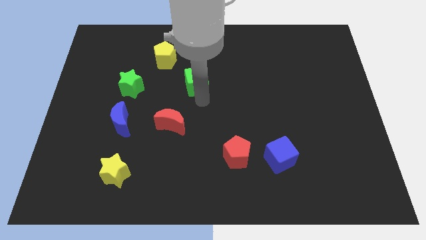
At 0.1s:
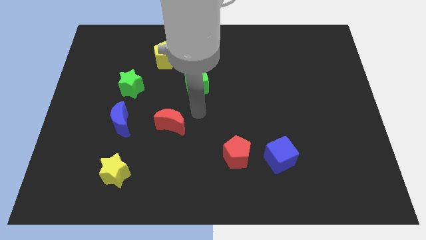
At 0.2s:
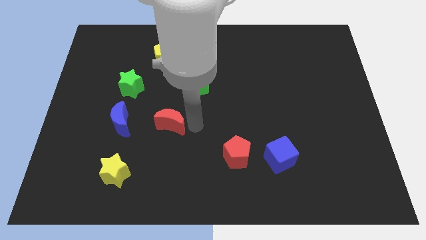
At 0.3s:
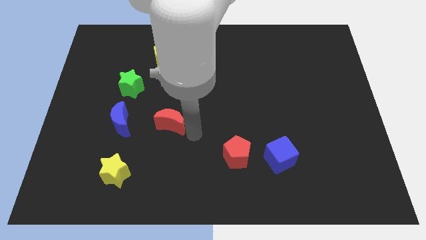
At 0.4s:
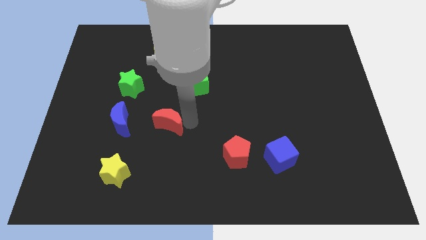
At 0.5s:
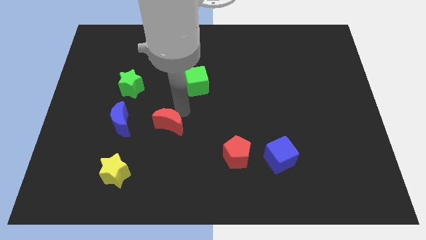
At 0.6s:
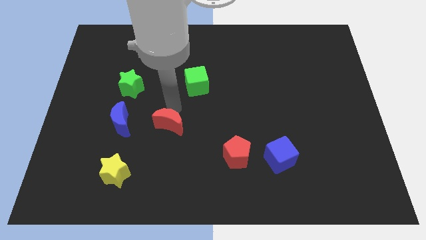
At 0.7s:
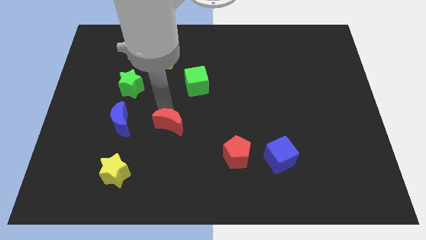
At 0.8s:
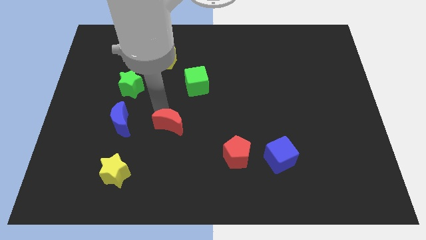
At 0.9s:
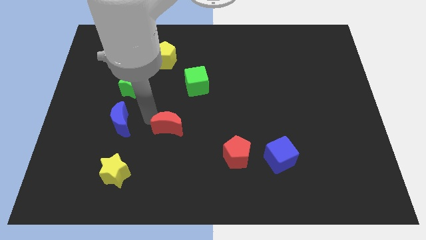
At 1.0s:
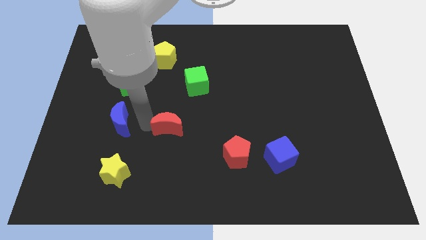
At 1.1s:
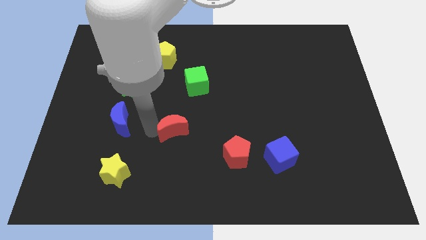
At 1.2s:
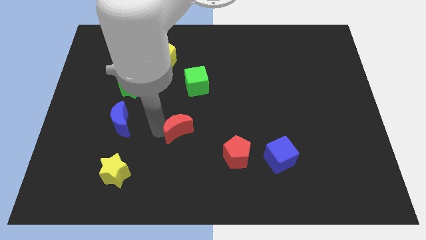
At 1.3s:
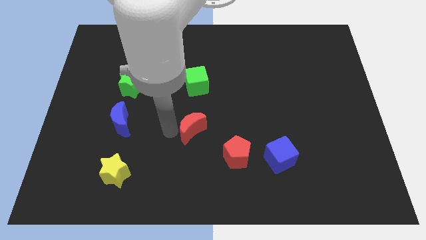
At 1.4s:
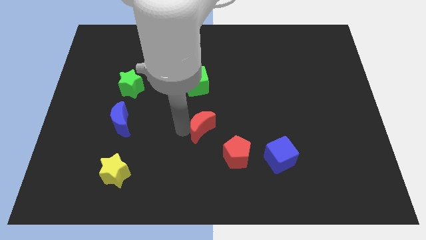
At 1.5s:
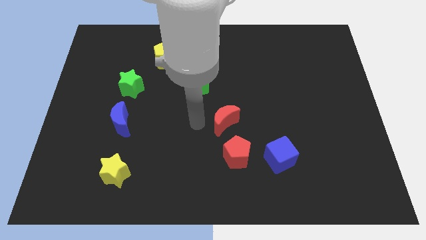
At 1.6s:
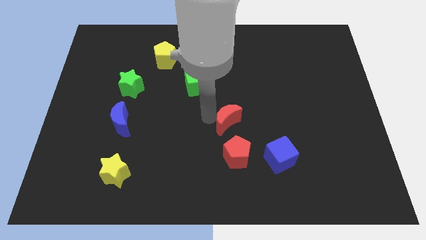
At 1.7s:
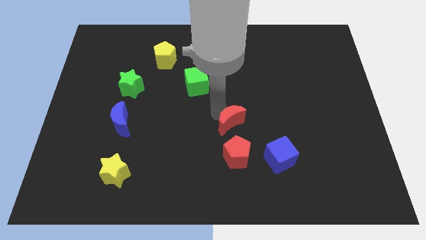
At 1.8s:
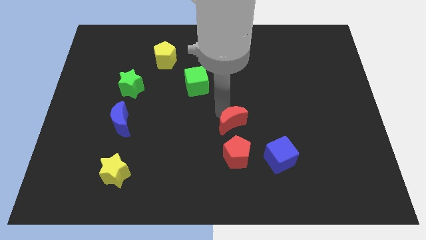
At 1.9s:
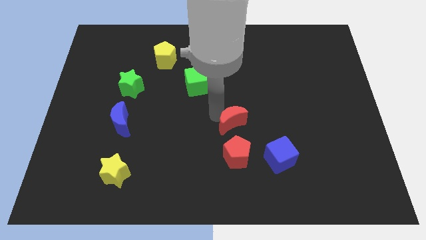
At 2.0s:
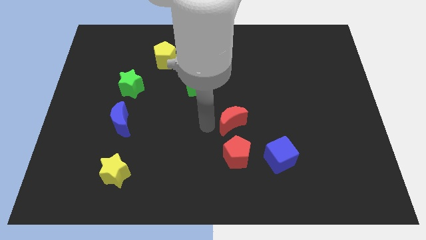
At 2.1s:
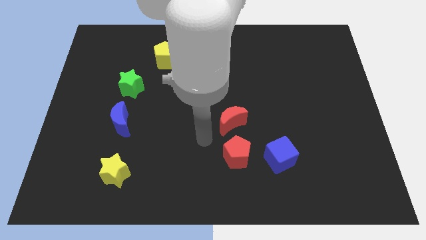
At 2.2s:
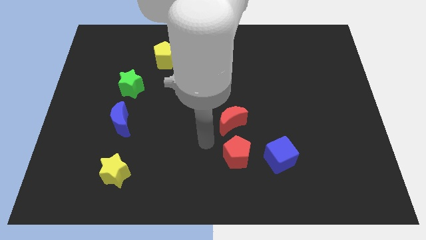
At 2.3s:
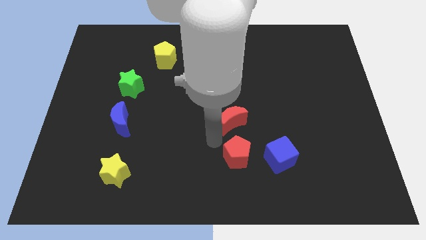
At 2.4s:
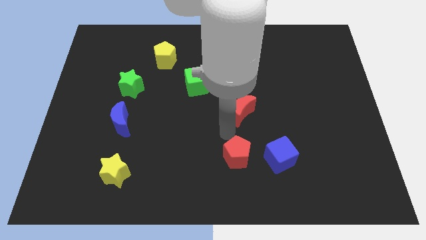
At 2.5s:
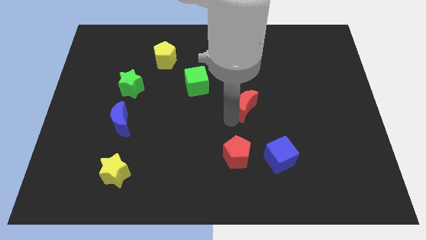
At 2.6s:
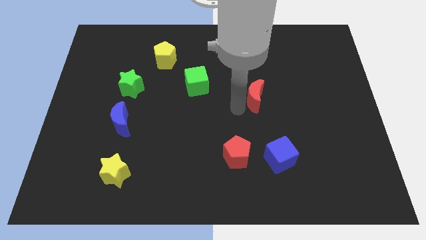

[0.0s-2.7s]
push the red moon towards right side

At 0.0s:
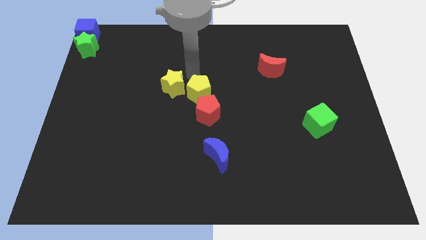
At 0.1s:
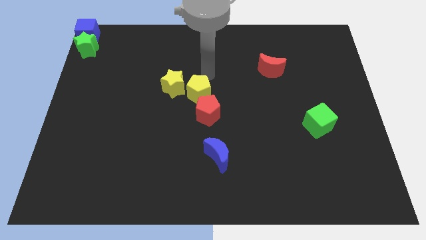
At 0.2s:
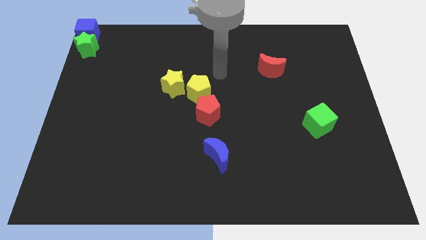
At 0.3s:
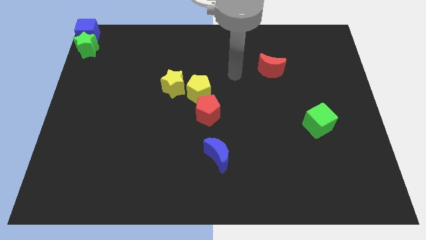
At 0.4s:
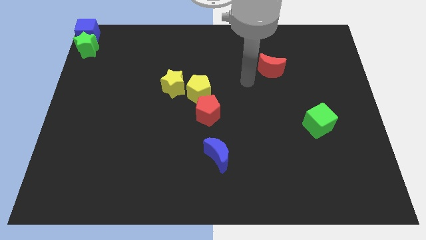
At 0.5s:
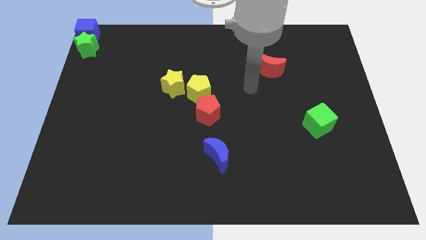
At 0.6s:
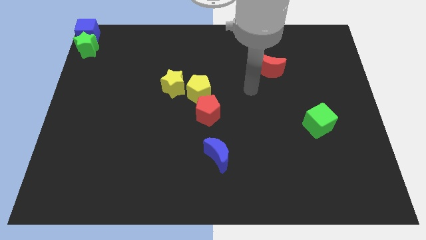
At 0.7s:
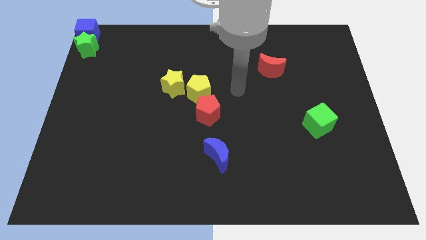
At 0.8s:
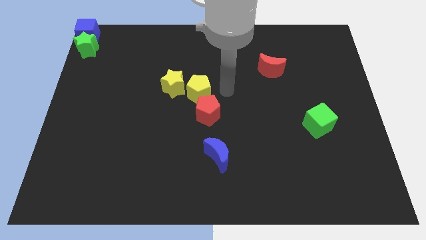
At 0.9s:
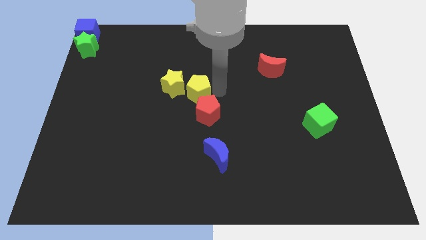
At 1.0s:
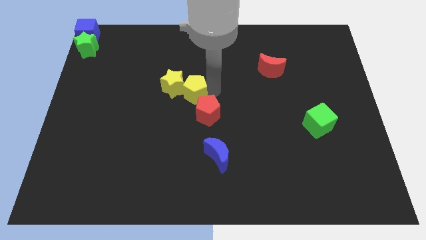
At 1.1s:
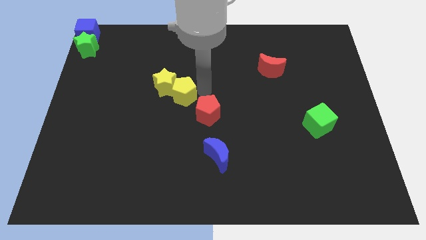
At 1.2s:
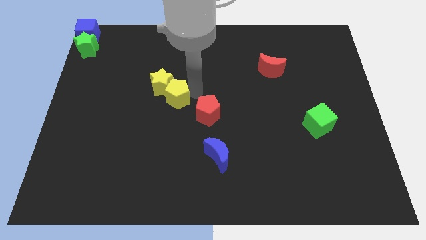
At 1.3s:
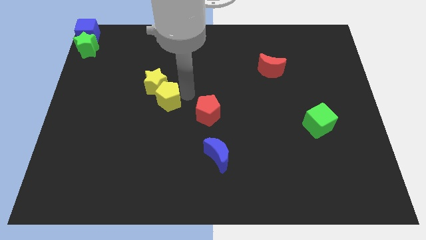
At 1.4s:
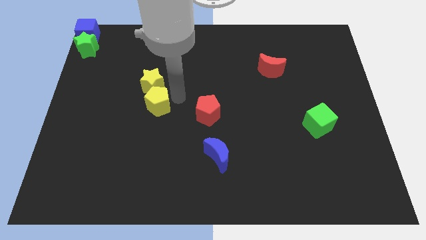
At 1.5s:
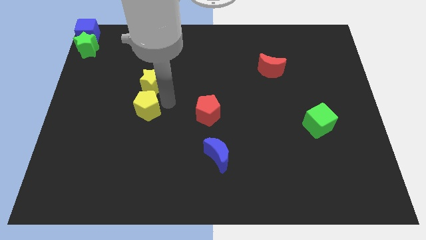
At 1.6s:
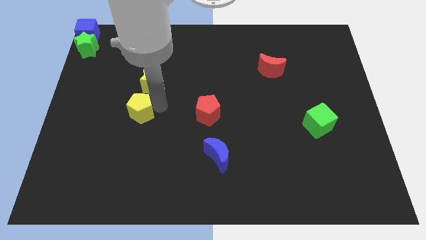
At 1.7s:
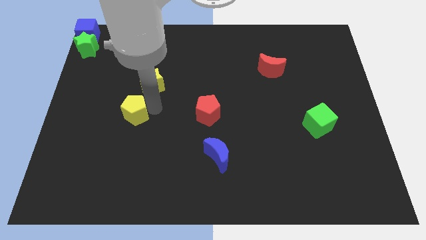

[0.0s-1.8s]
place the yellow pentagon below the yellow star

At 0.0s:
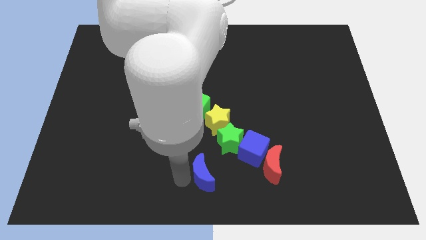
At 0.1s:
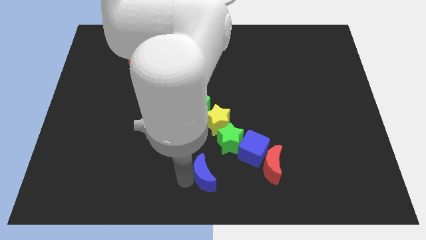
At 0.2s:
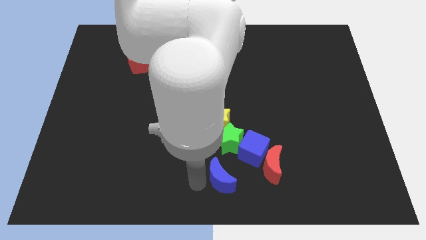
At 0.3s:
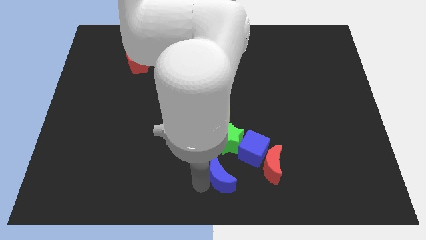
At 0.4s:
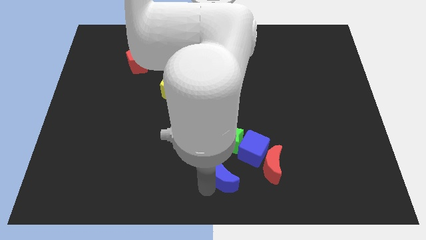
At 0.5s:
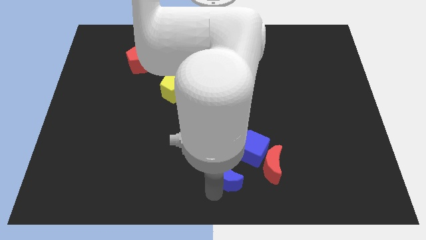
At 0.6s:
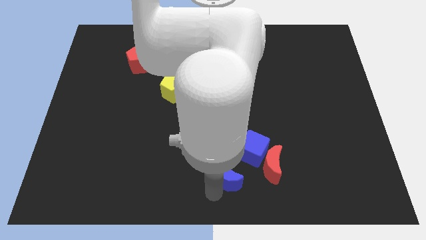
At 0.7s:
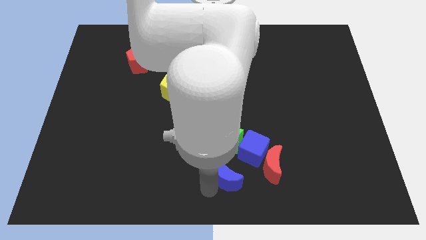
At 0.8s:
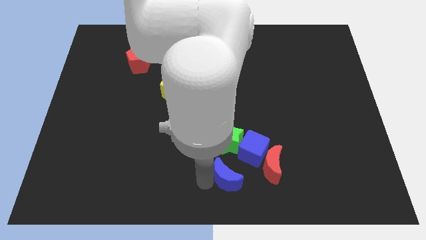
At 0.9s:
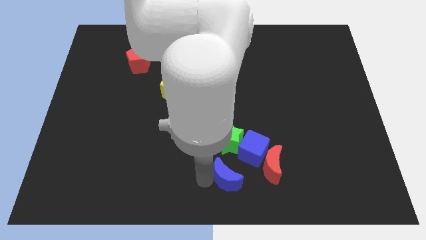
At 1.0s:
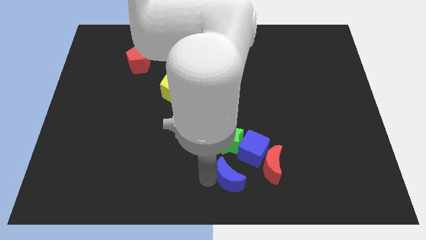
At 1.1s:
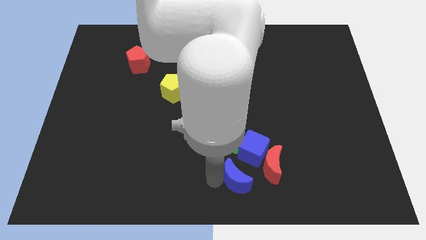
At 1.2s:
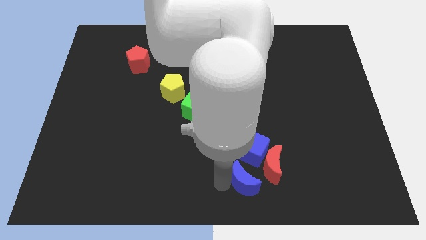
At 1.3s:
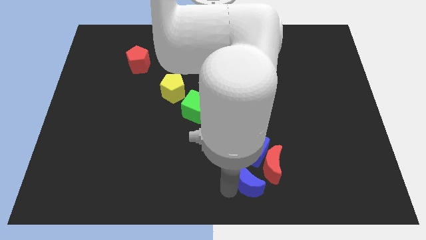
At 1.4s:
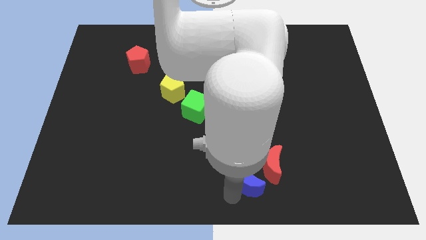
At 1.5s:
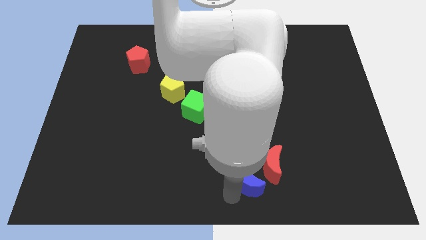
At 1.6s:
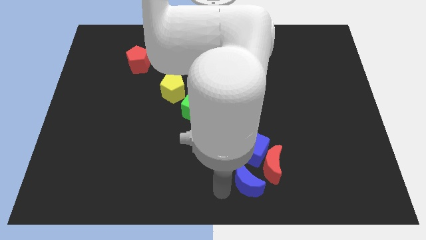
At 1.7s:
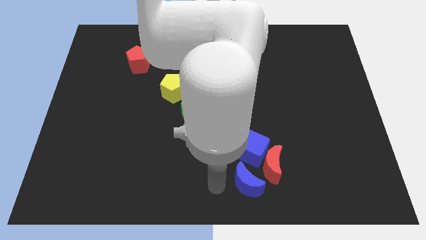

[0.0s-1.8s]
move the blue moon close to the red moon

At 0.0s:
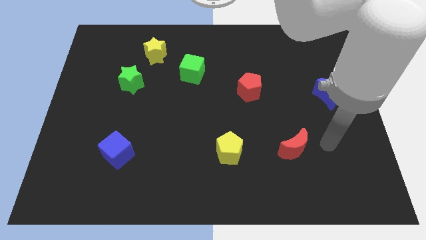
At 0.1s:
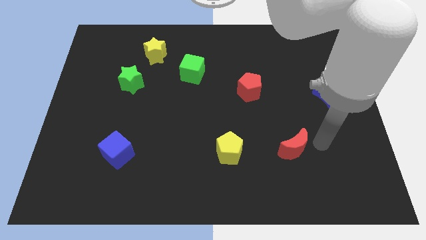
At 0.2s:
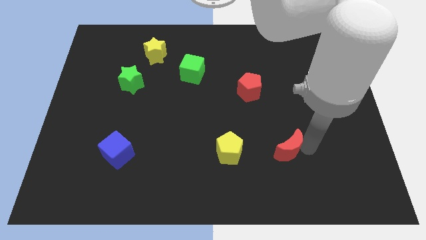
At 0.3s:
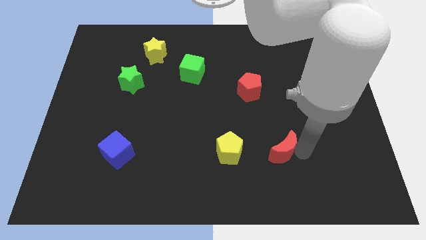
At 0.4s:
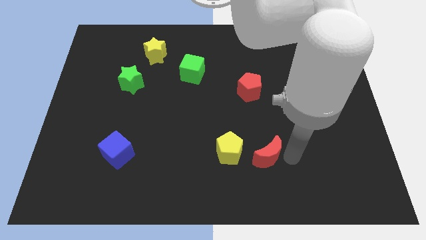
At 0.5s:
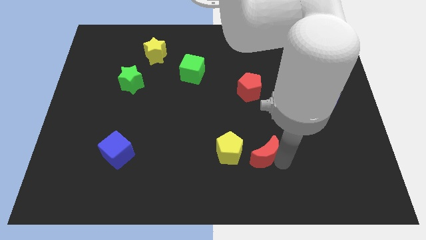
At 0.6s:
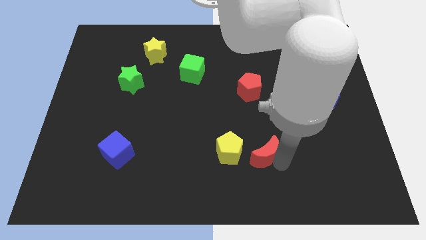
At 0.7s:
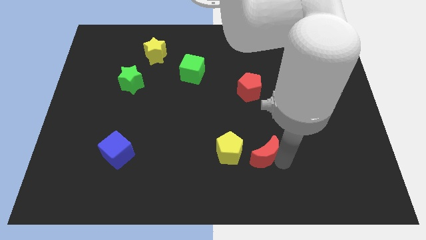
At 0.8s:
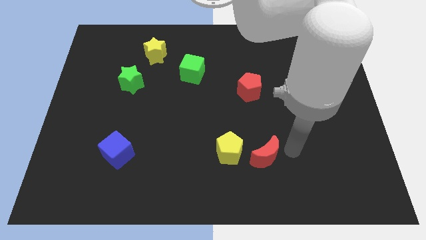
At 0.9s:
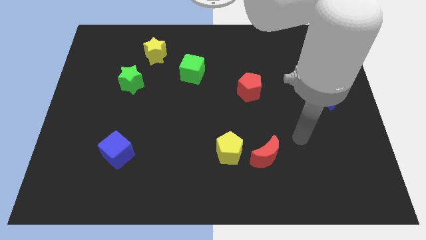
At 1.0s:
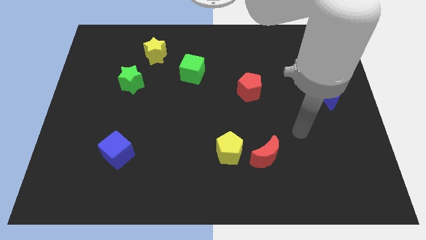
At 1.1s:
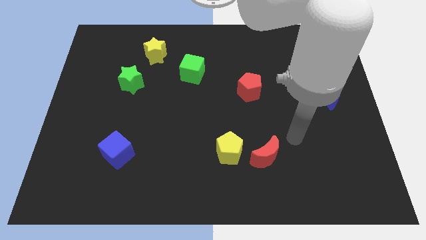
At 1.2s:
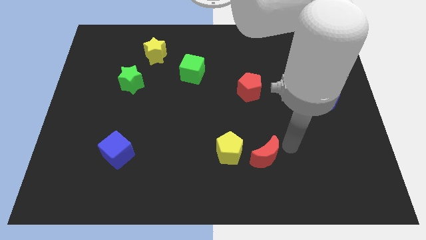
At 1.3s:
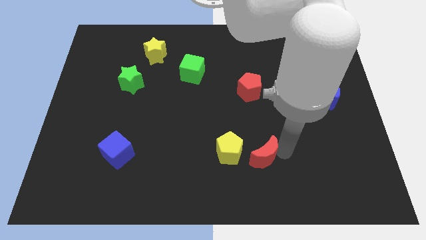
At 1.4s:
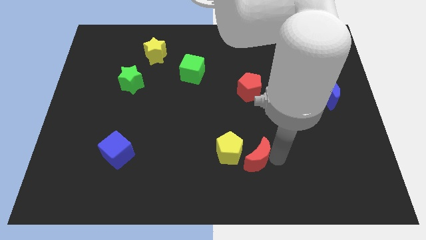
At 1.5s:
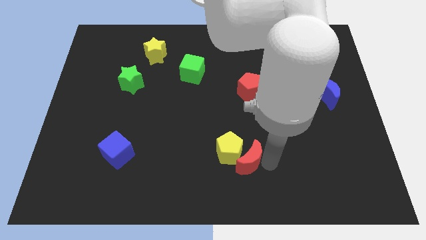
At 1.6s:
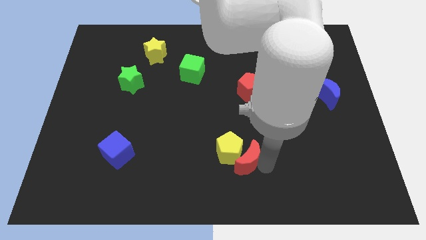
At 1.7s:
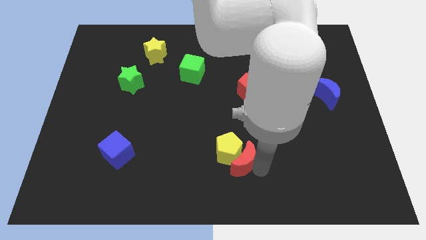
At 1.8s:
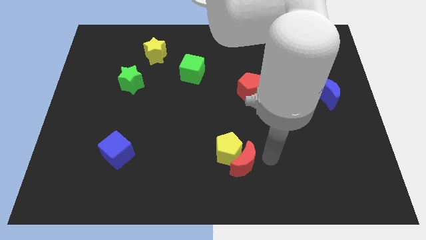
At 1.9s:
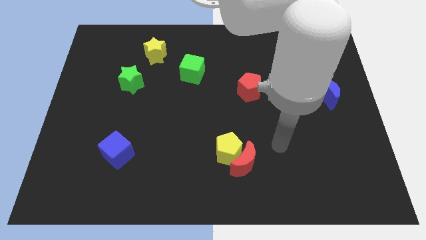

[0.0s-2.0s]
push the red moon into the yellow pentagon

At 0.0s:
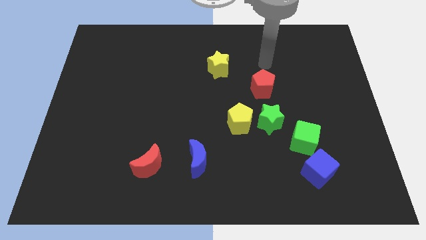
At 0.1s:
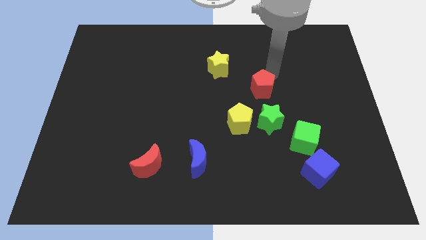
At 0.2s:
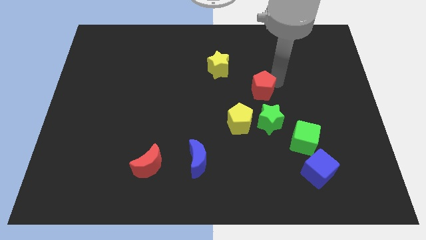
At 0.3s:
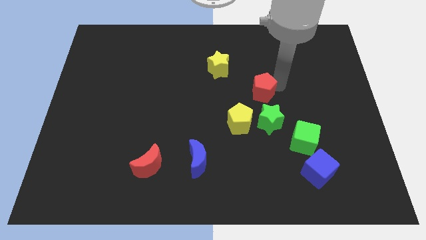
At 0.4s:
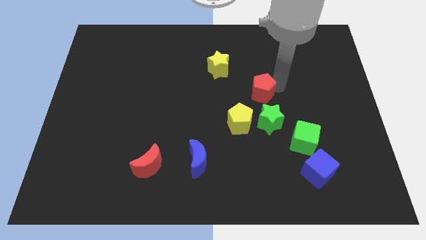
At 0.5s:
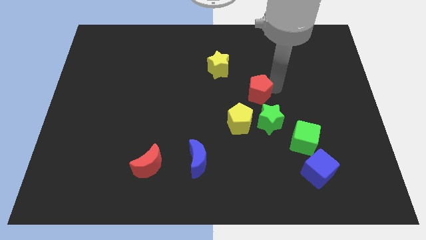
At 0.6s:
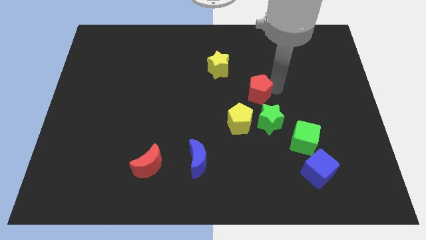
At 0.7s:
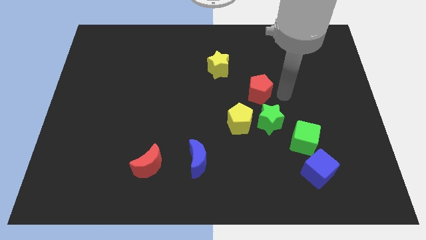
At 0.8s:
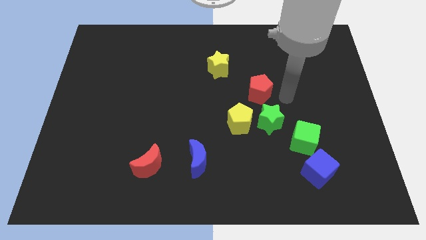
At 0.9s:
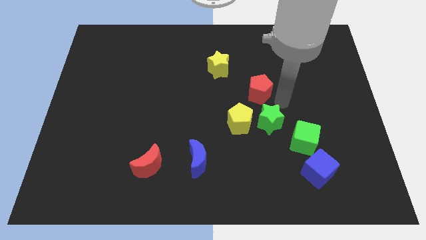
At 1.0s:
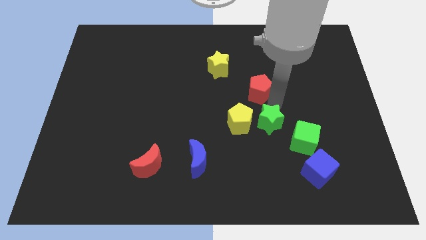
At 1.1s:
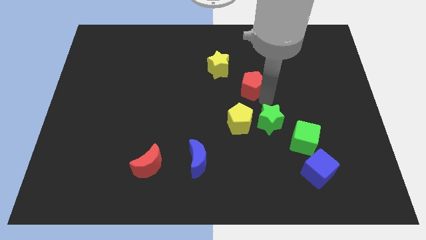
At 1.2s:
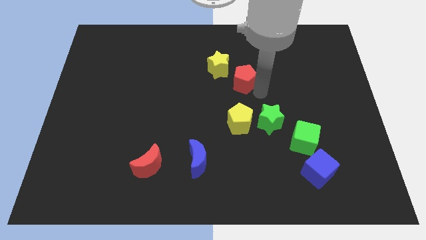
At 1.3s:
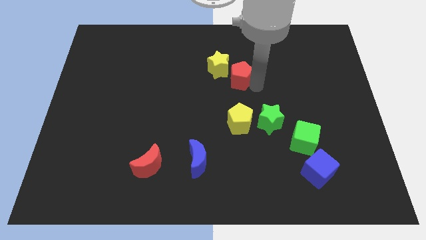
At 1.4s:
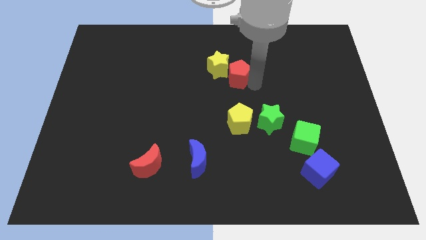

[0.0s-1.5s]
push the red pentagon into the bottom right side of the yellow star
